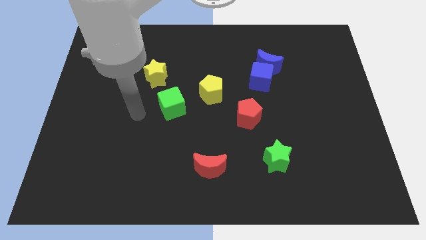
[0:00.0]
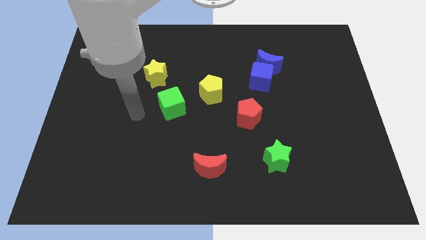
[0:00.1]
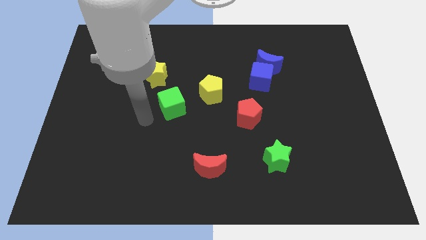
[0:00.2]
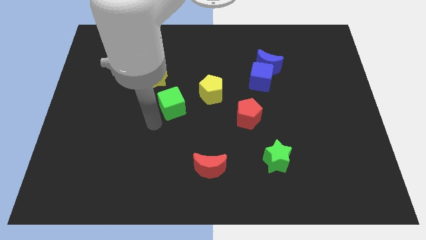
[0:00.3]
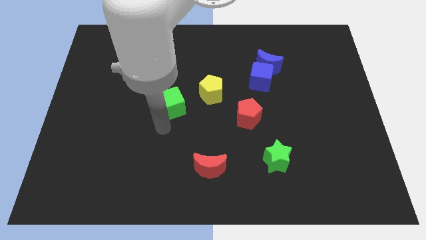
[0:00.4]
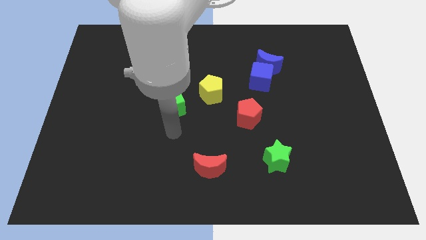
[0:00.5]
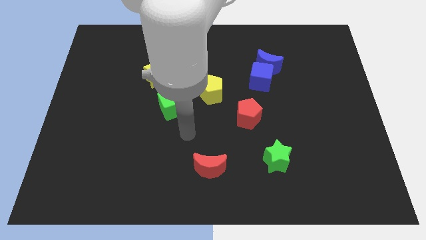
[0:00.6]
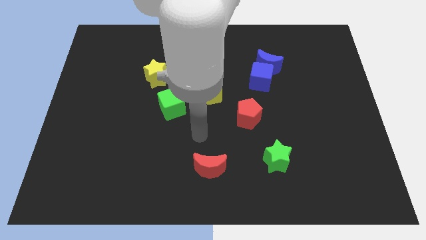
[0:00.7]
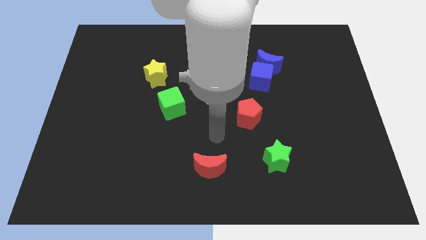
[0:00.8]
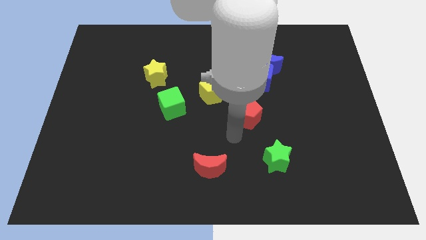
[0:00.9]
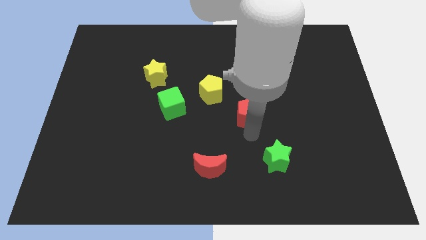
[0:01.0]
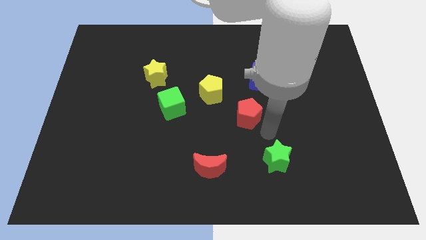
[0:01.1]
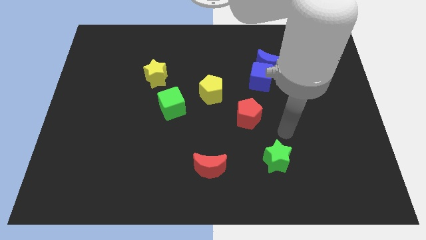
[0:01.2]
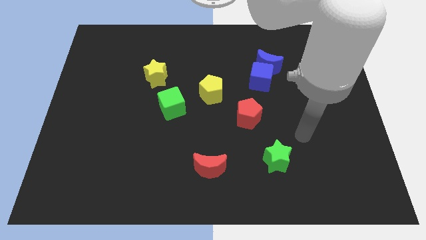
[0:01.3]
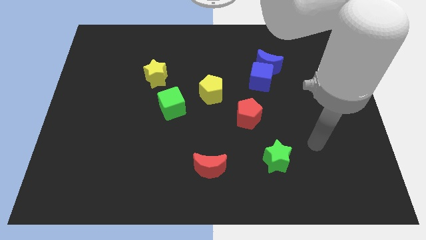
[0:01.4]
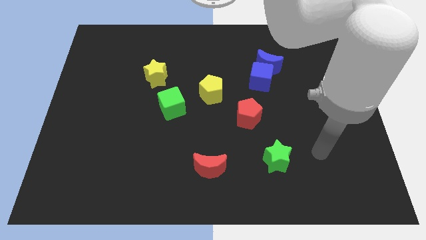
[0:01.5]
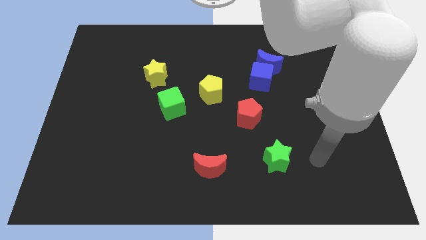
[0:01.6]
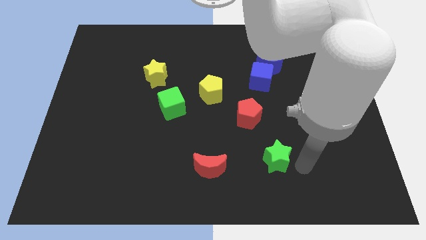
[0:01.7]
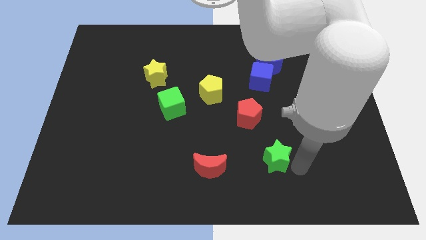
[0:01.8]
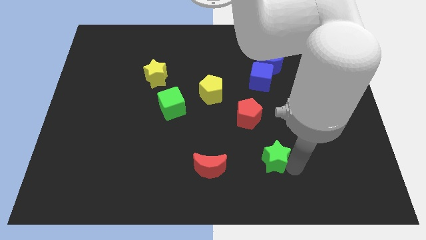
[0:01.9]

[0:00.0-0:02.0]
touch a green star with your arm

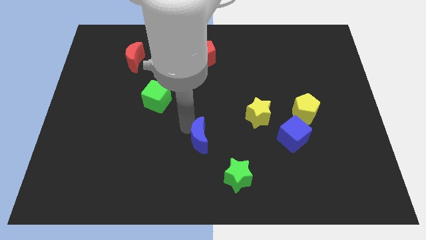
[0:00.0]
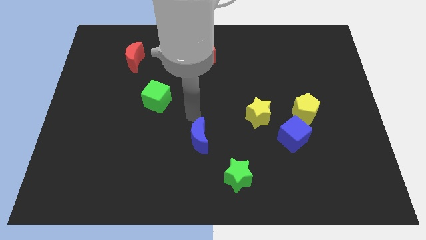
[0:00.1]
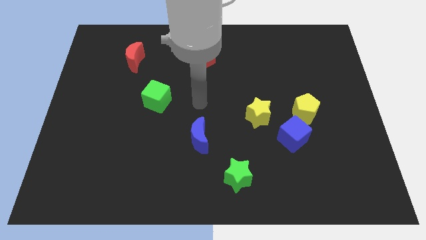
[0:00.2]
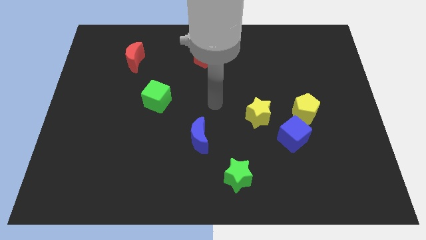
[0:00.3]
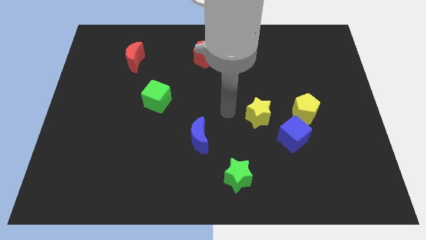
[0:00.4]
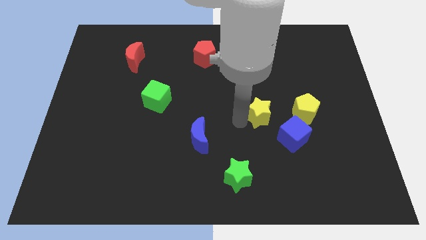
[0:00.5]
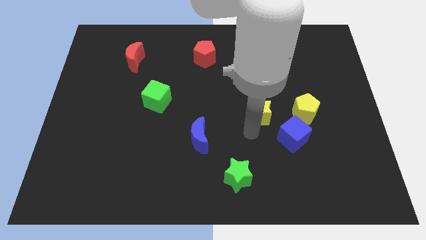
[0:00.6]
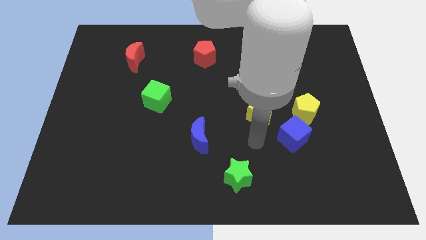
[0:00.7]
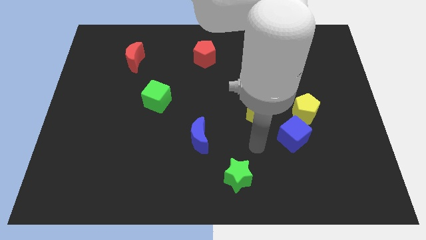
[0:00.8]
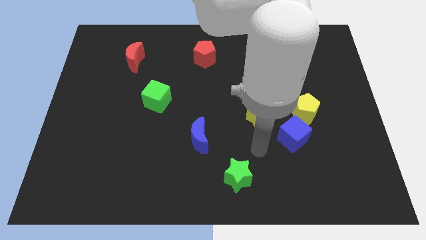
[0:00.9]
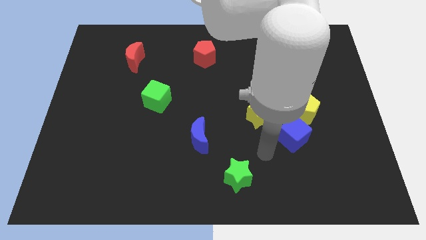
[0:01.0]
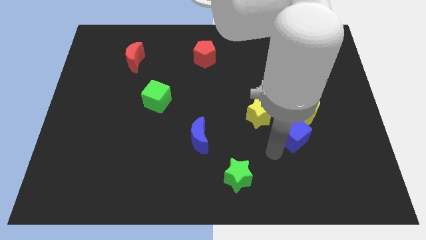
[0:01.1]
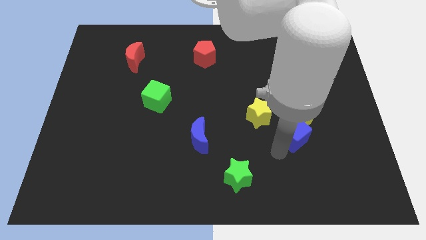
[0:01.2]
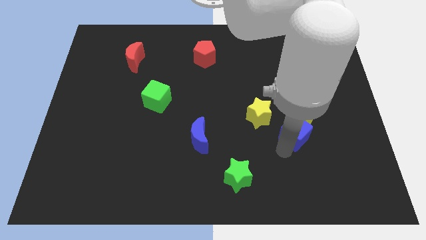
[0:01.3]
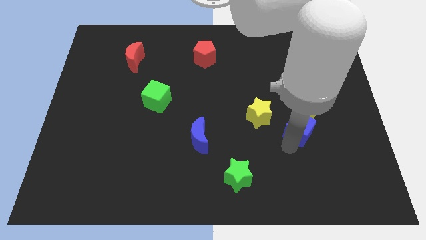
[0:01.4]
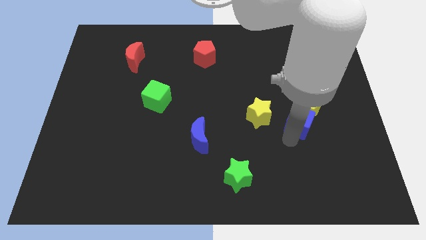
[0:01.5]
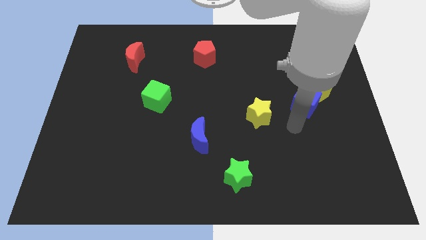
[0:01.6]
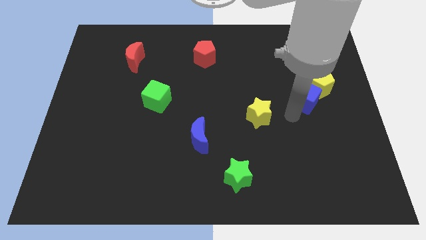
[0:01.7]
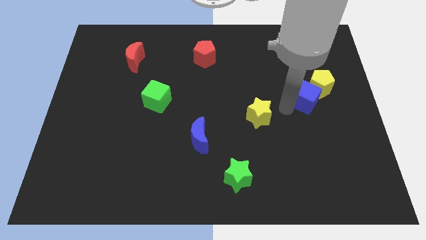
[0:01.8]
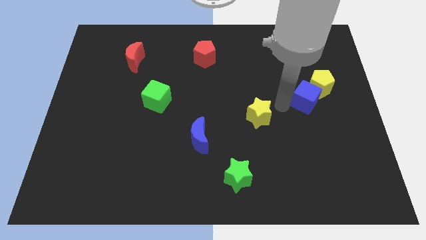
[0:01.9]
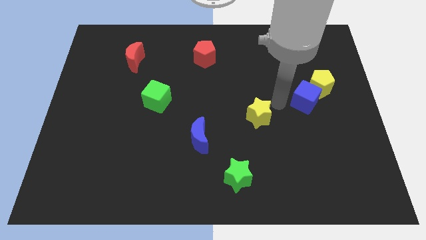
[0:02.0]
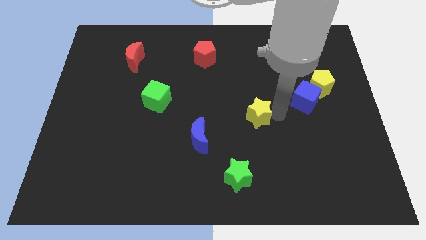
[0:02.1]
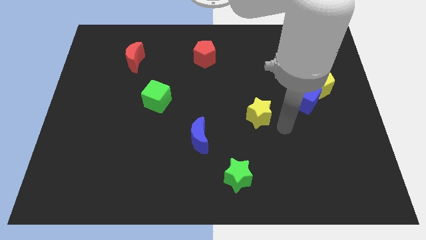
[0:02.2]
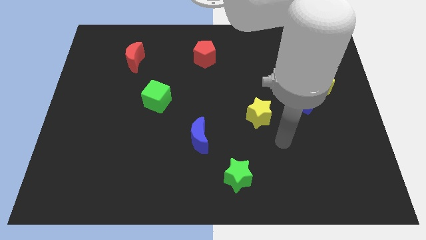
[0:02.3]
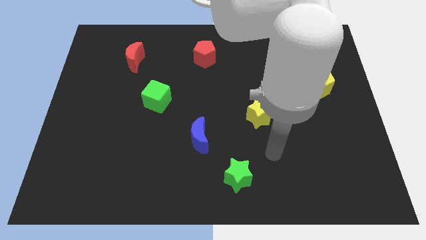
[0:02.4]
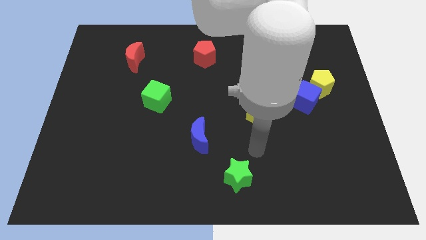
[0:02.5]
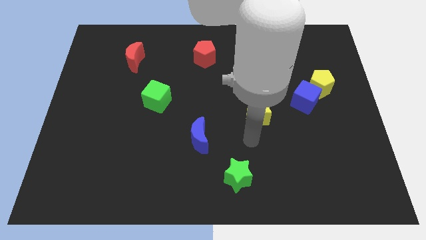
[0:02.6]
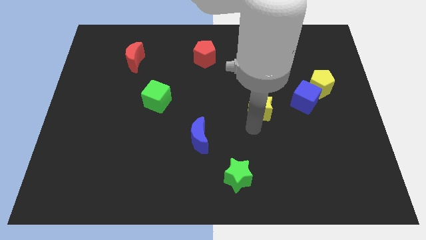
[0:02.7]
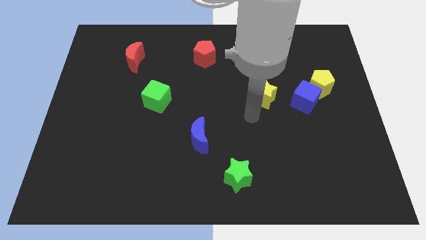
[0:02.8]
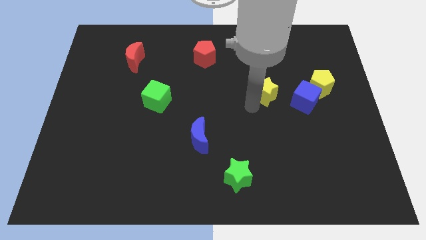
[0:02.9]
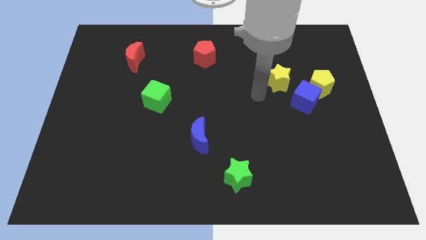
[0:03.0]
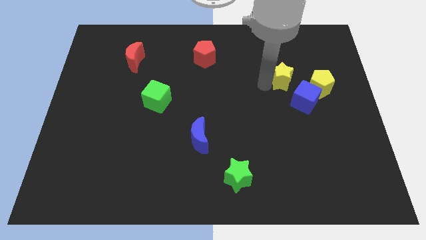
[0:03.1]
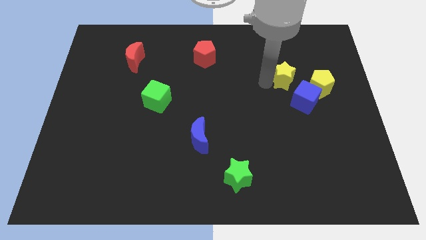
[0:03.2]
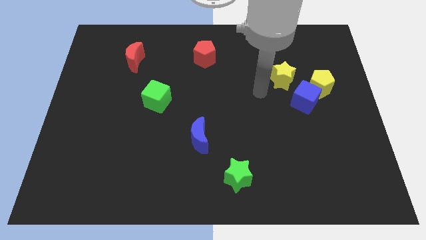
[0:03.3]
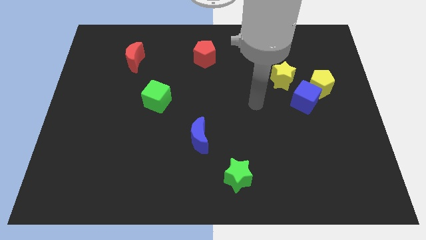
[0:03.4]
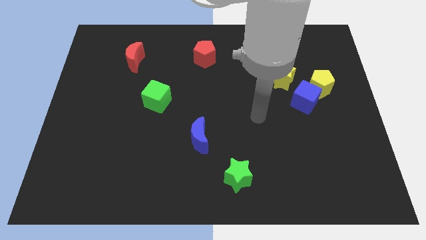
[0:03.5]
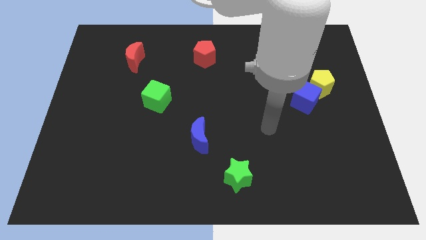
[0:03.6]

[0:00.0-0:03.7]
push the group of blocks towards the top right side of the board

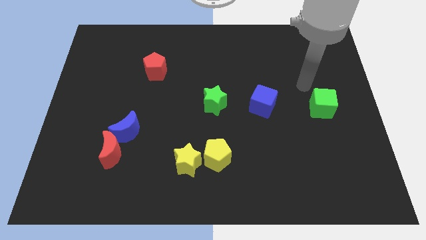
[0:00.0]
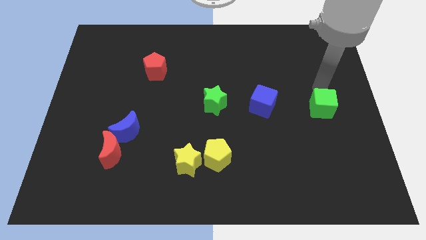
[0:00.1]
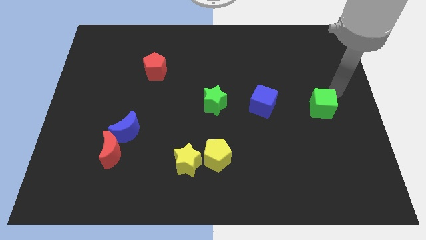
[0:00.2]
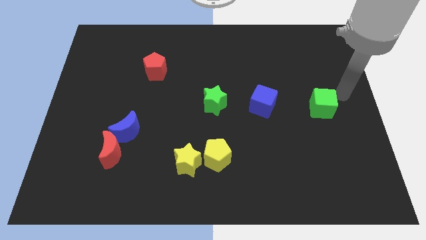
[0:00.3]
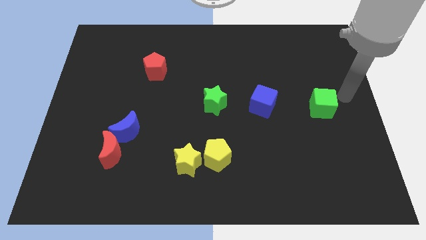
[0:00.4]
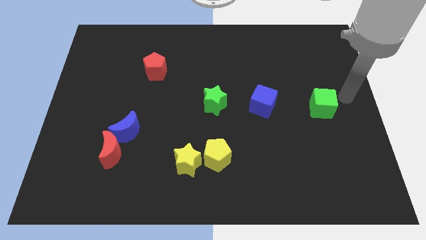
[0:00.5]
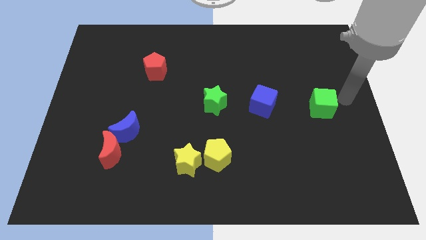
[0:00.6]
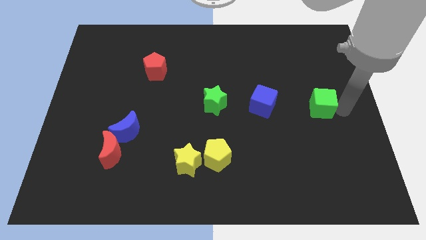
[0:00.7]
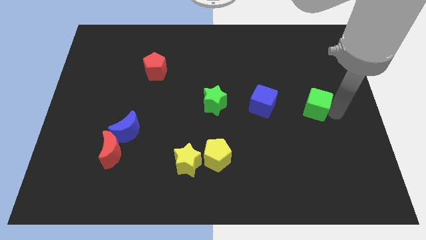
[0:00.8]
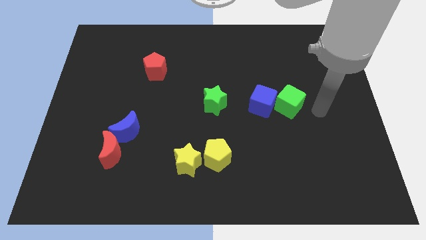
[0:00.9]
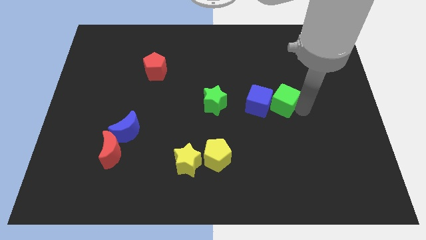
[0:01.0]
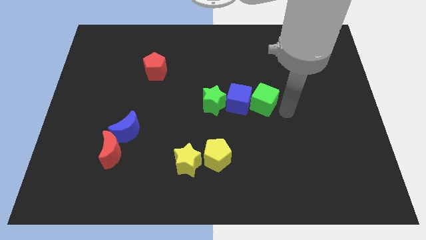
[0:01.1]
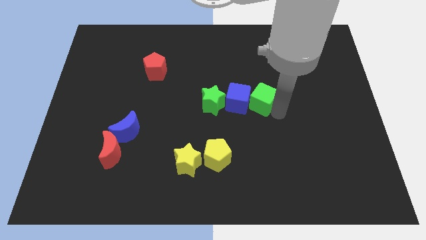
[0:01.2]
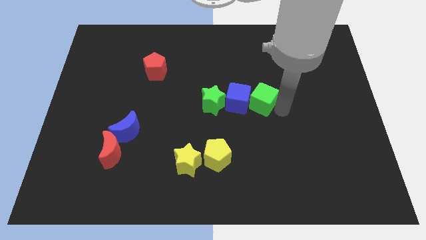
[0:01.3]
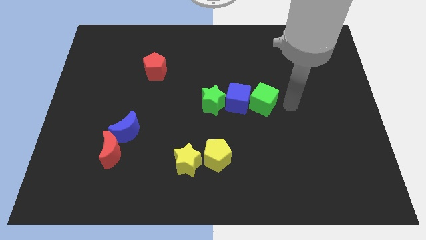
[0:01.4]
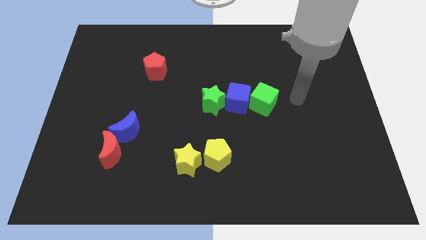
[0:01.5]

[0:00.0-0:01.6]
place the green cube into the blue cube

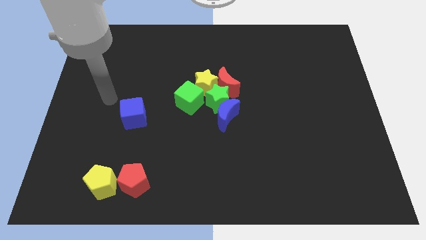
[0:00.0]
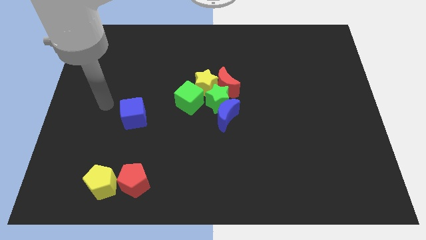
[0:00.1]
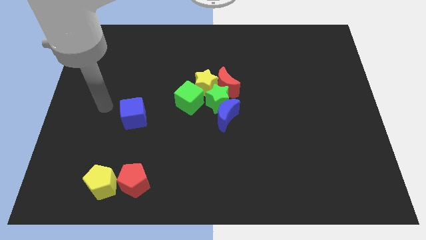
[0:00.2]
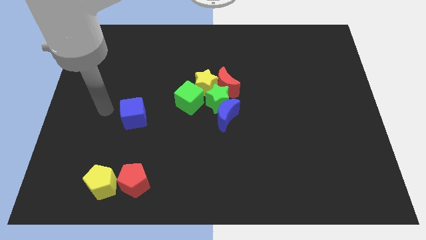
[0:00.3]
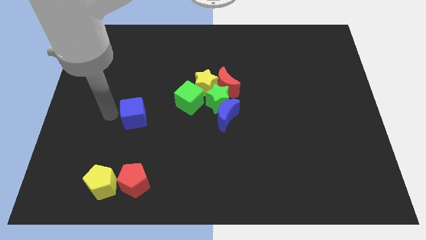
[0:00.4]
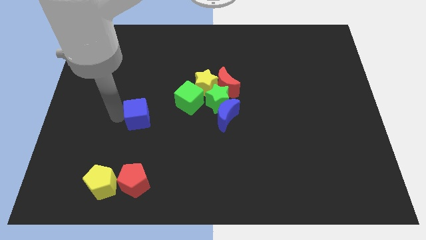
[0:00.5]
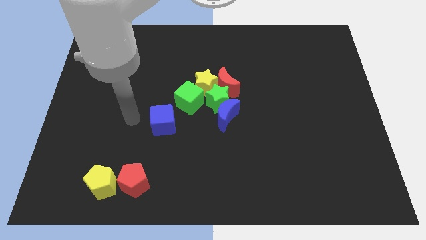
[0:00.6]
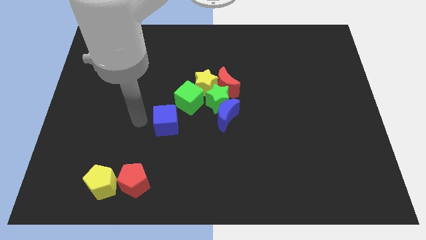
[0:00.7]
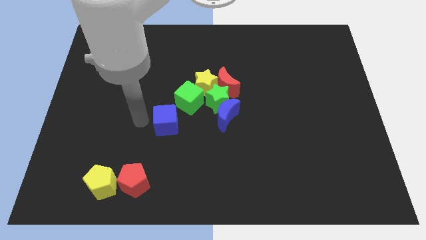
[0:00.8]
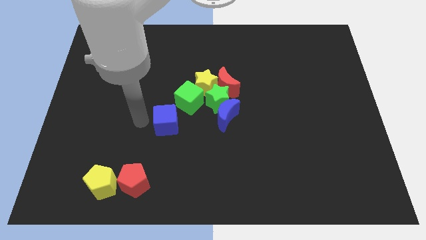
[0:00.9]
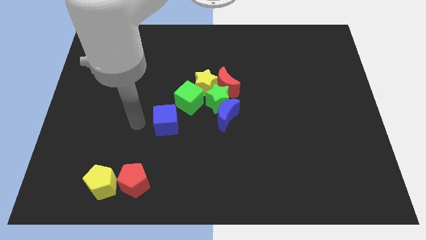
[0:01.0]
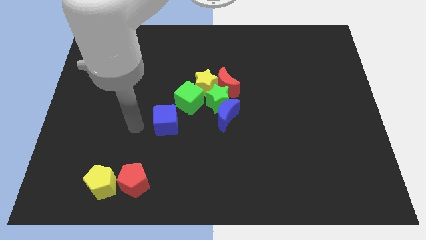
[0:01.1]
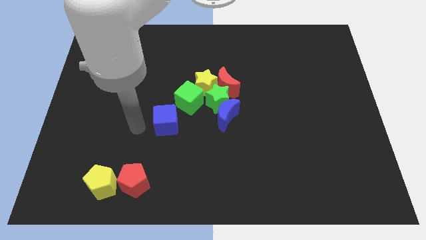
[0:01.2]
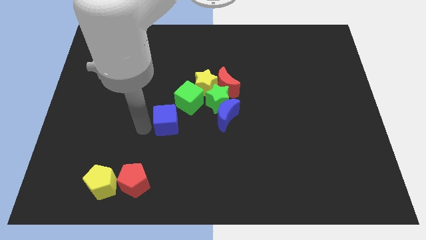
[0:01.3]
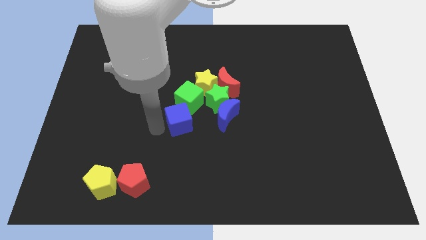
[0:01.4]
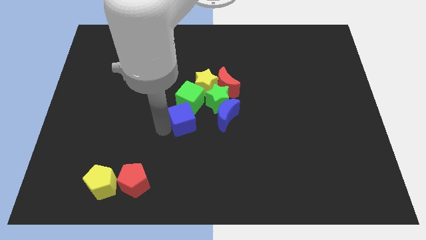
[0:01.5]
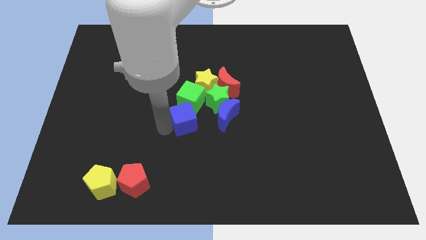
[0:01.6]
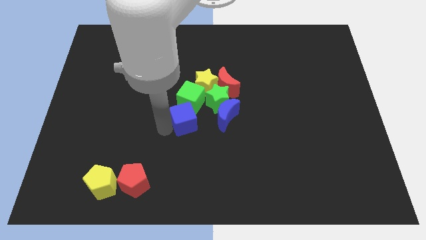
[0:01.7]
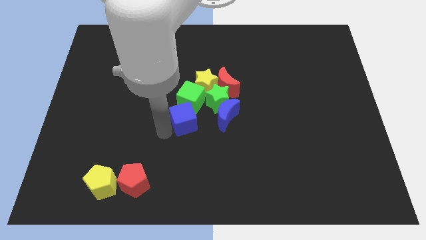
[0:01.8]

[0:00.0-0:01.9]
place the blue cube below the green cube
